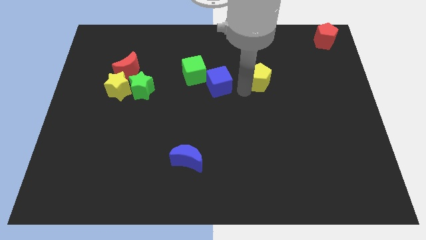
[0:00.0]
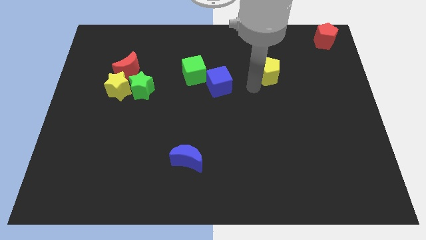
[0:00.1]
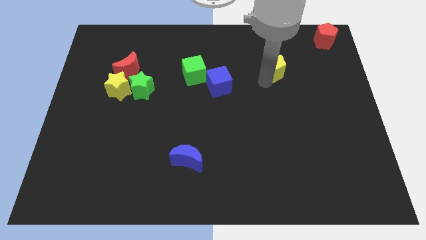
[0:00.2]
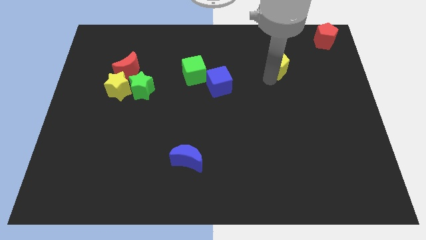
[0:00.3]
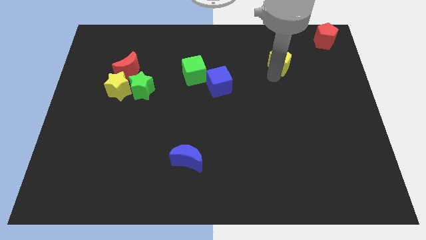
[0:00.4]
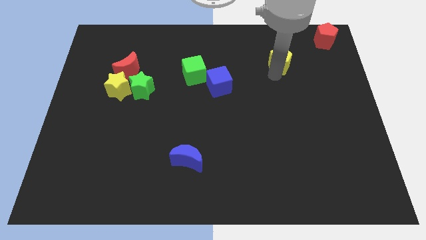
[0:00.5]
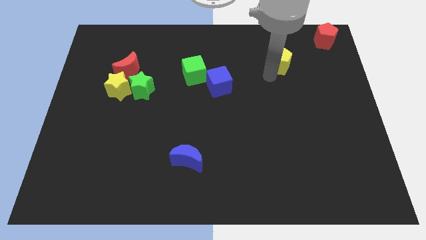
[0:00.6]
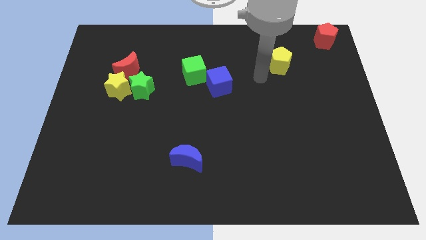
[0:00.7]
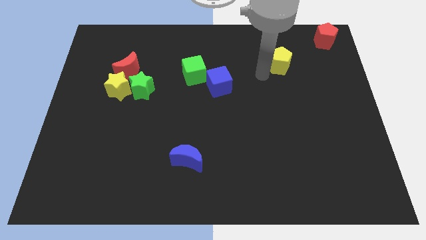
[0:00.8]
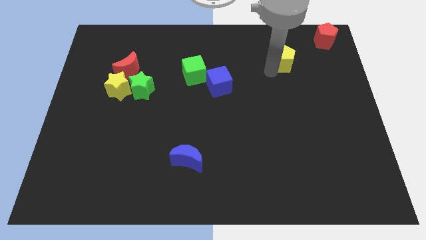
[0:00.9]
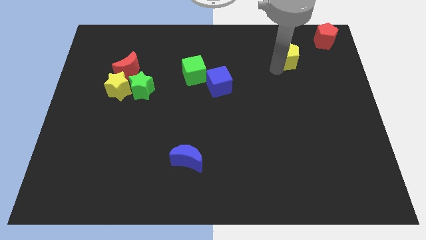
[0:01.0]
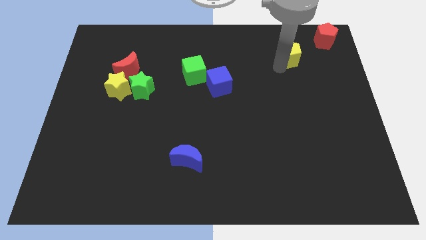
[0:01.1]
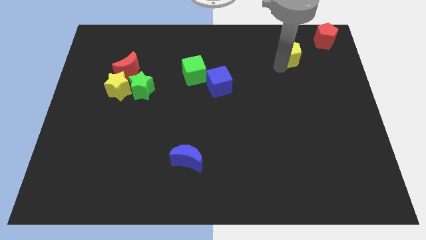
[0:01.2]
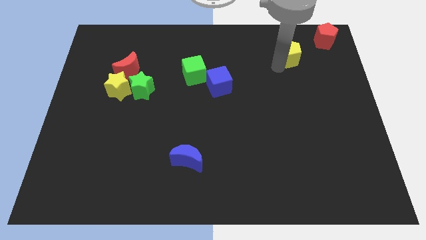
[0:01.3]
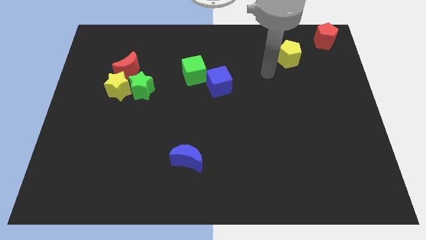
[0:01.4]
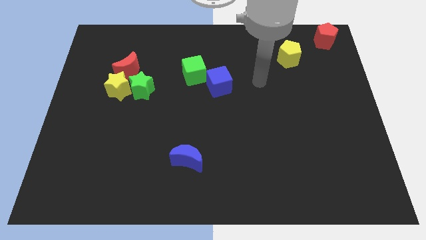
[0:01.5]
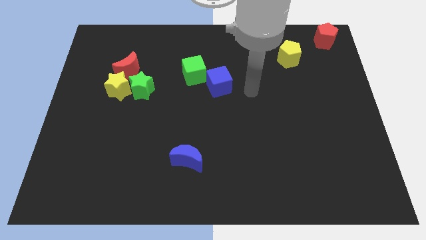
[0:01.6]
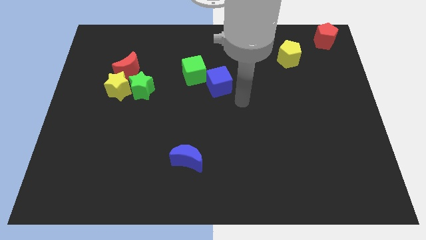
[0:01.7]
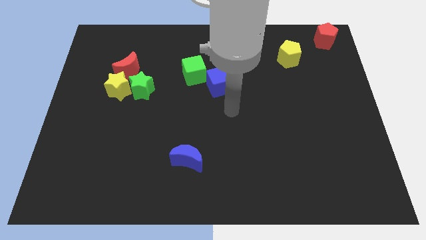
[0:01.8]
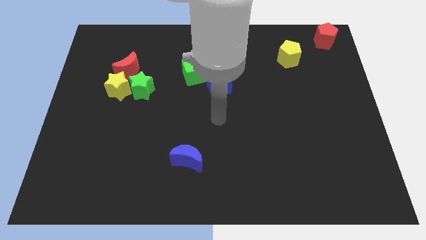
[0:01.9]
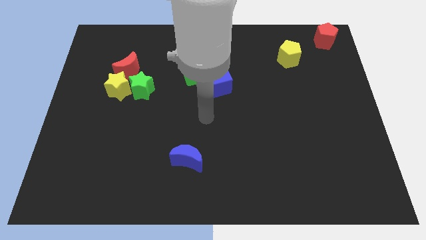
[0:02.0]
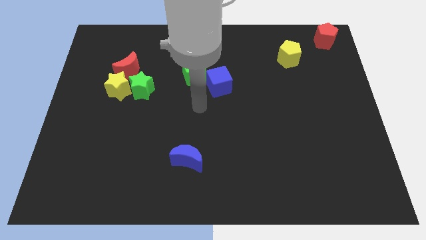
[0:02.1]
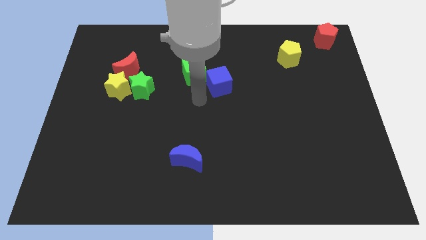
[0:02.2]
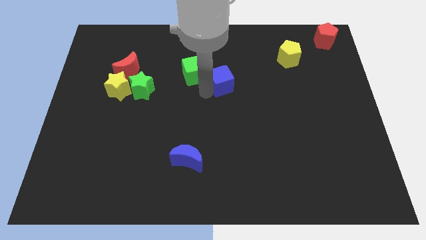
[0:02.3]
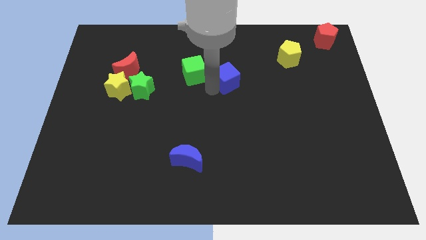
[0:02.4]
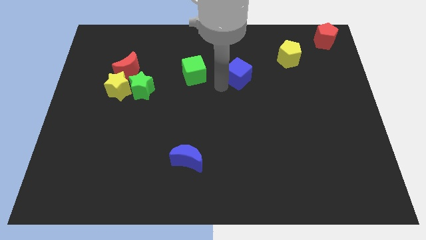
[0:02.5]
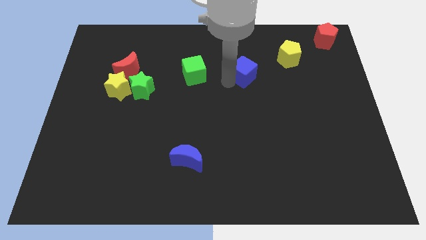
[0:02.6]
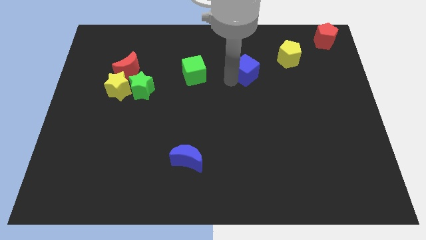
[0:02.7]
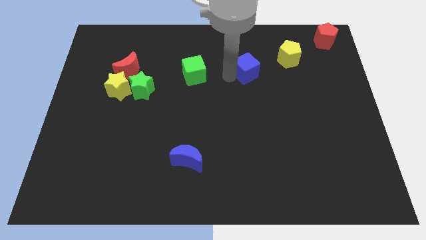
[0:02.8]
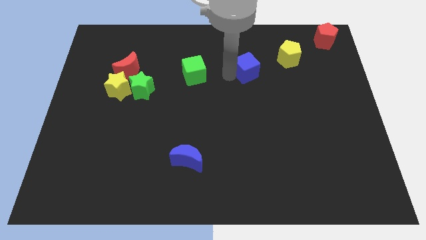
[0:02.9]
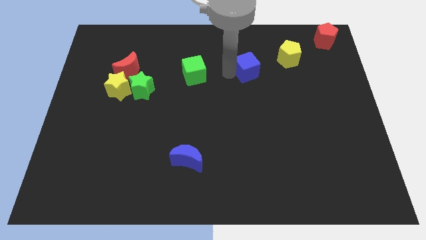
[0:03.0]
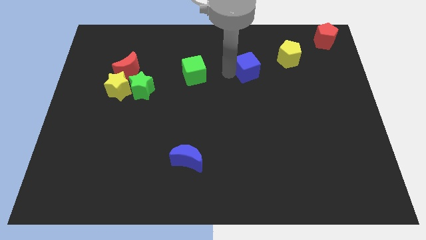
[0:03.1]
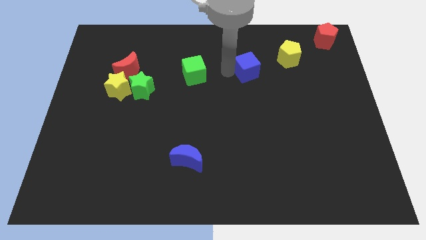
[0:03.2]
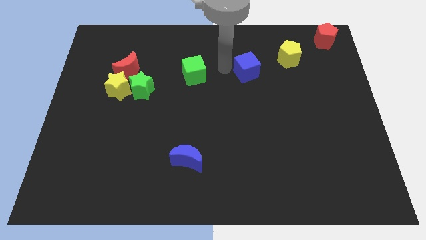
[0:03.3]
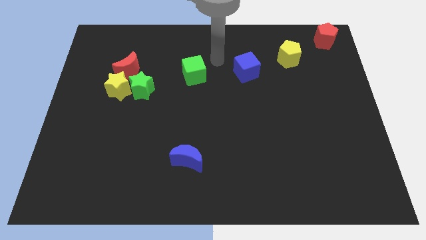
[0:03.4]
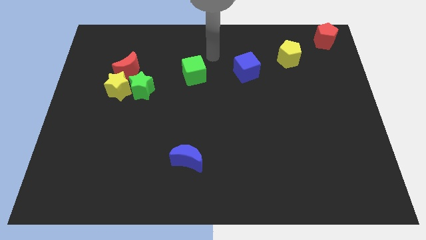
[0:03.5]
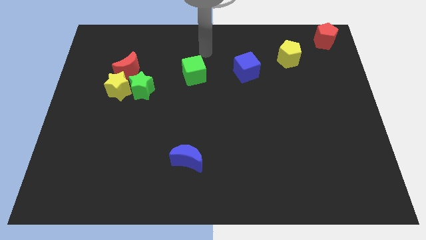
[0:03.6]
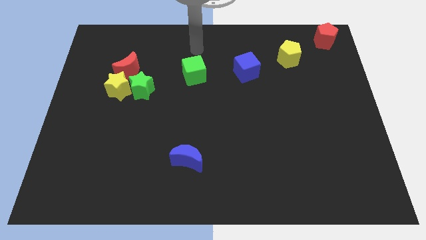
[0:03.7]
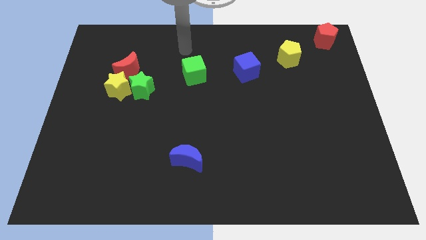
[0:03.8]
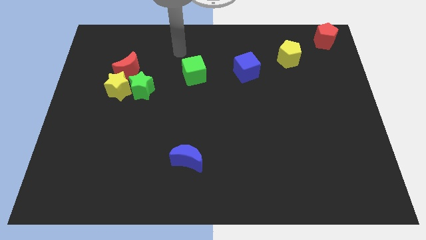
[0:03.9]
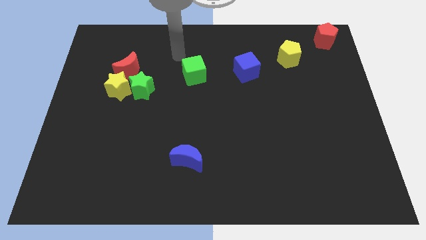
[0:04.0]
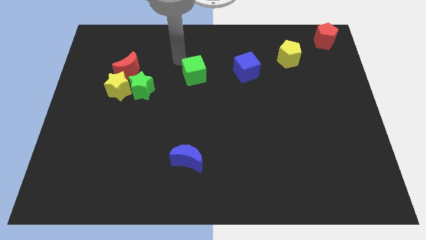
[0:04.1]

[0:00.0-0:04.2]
separate the blue cube green cube and the yellow pentagon

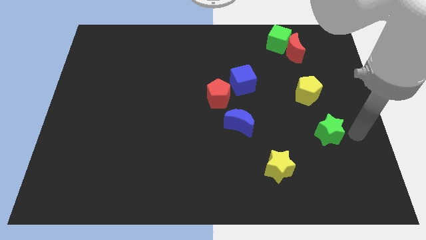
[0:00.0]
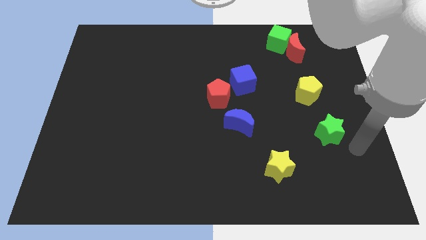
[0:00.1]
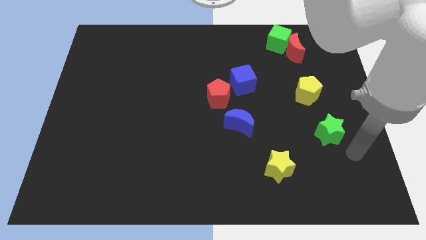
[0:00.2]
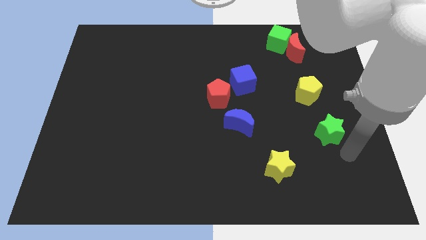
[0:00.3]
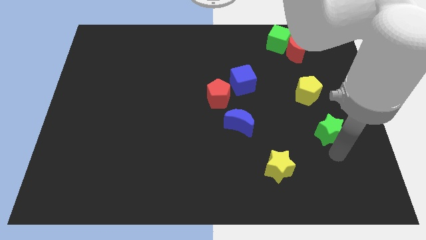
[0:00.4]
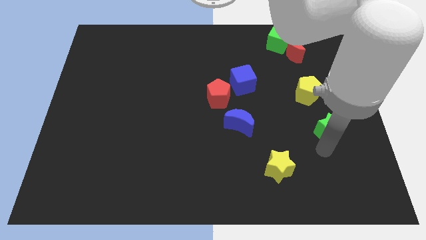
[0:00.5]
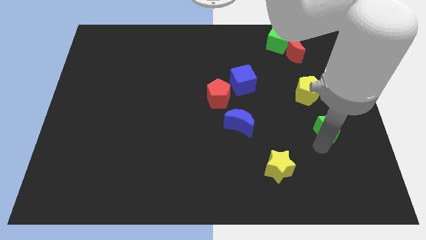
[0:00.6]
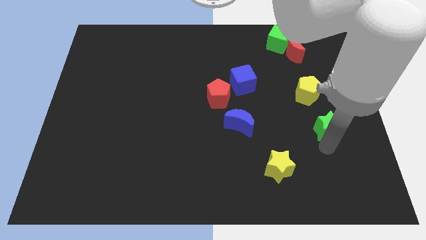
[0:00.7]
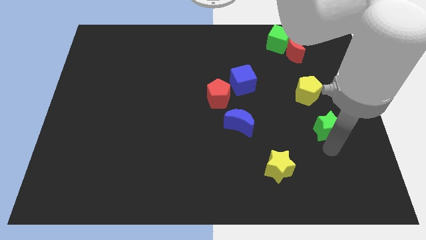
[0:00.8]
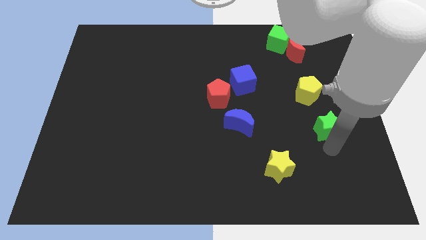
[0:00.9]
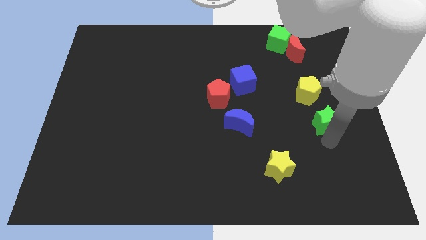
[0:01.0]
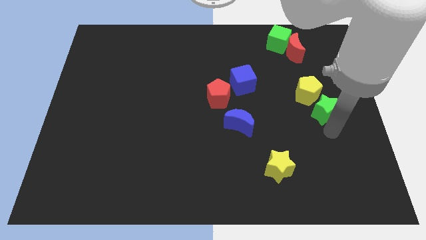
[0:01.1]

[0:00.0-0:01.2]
slide green star towards yellow pentagon

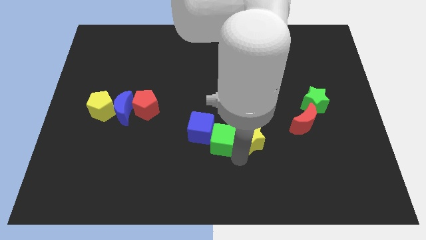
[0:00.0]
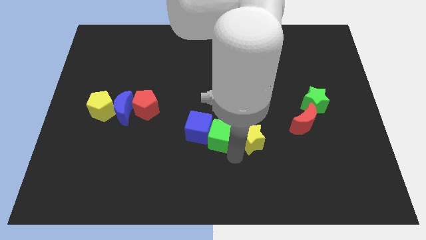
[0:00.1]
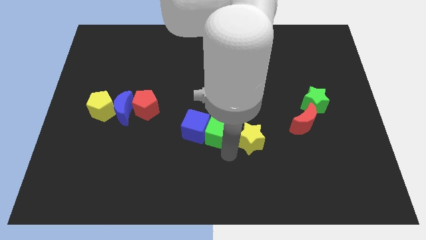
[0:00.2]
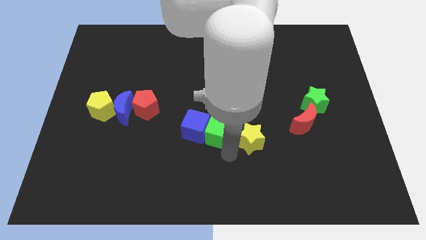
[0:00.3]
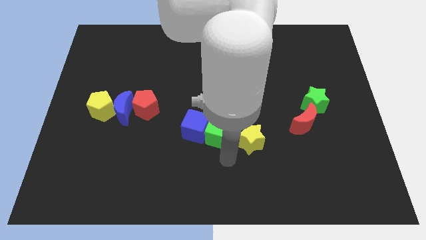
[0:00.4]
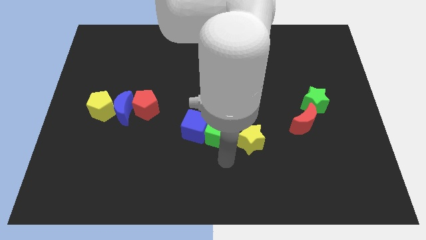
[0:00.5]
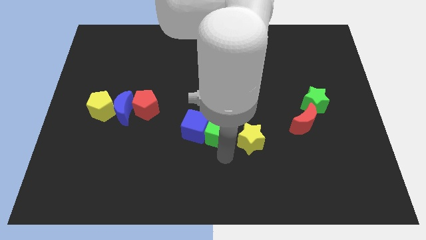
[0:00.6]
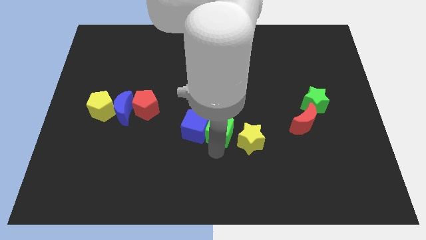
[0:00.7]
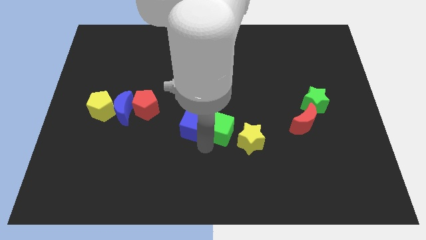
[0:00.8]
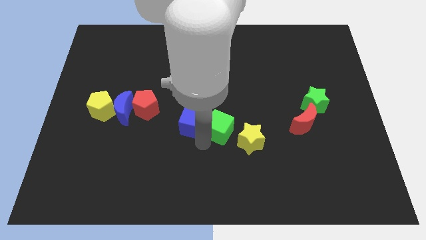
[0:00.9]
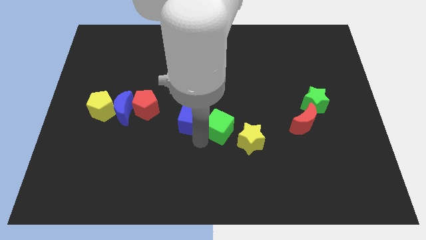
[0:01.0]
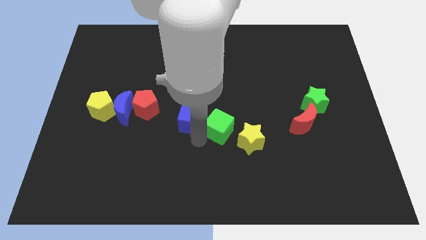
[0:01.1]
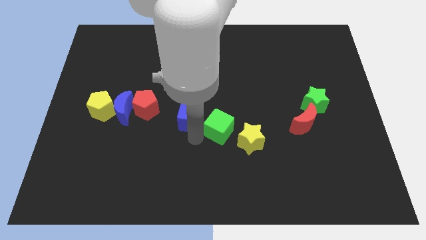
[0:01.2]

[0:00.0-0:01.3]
push the cubes towards the center of the board

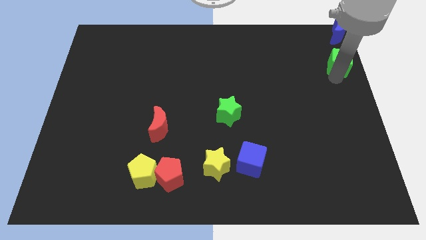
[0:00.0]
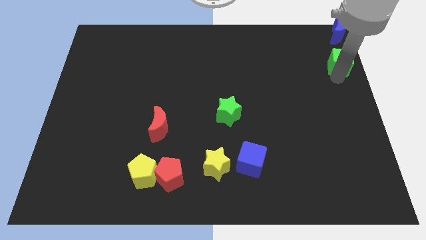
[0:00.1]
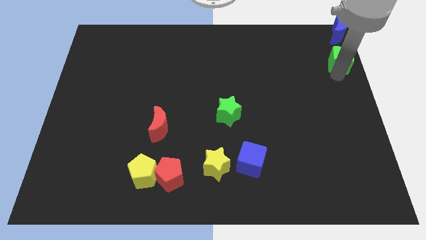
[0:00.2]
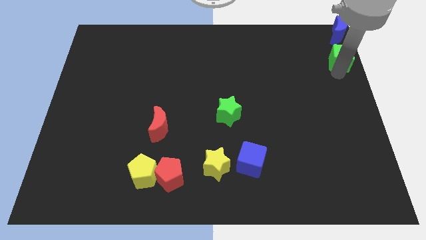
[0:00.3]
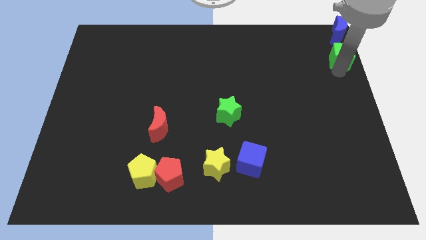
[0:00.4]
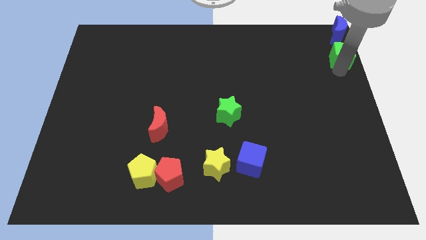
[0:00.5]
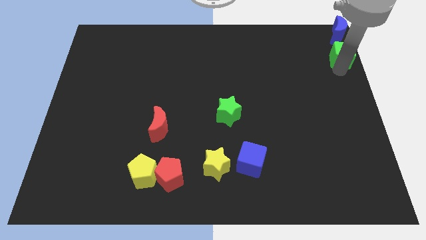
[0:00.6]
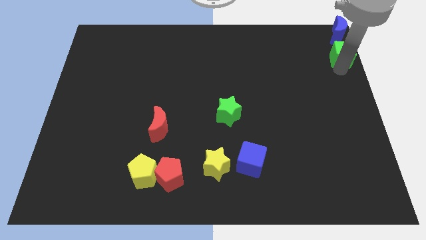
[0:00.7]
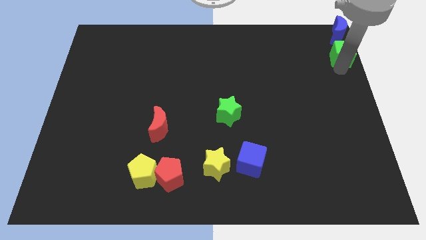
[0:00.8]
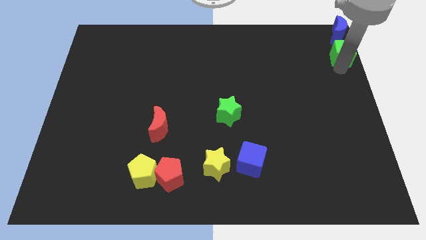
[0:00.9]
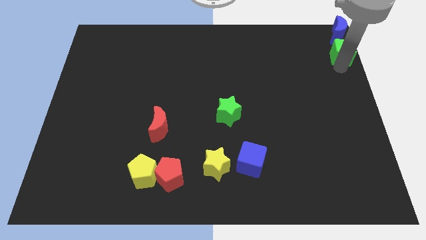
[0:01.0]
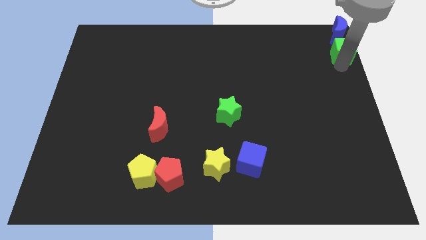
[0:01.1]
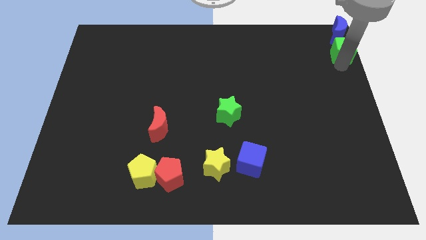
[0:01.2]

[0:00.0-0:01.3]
move the green cube to the bottom side of the blue moon

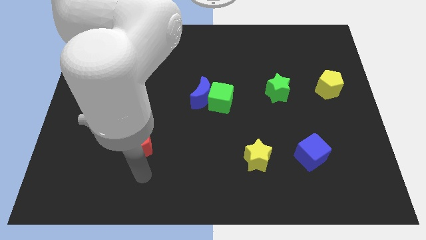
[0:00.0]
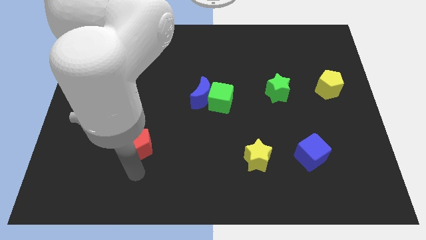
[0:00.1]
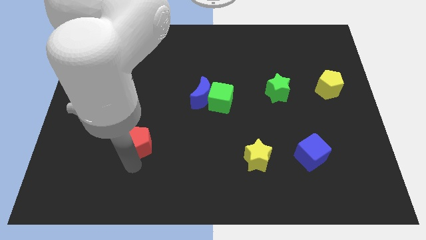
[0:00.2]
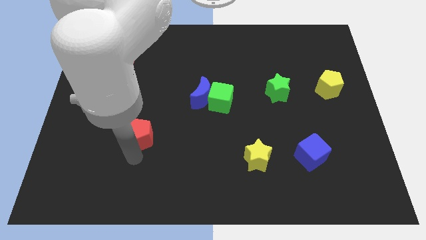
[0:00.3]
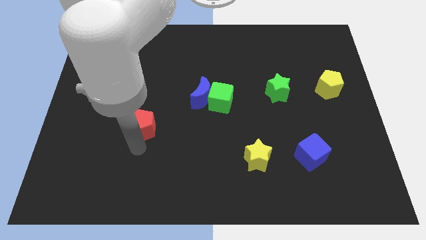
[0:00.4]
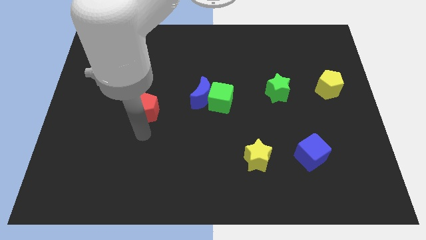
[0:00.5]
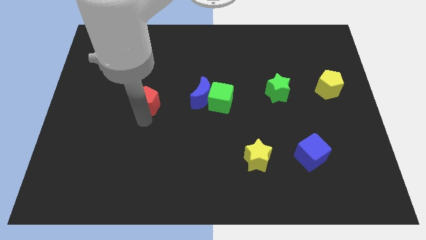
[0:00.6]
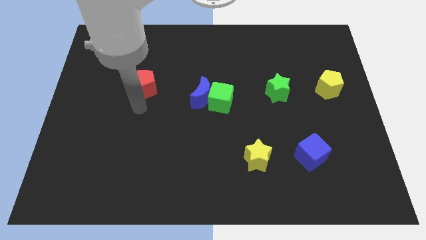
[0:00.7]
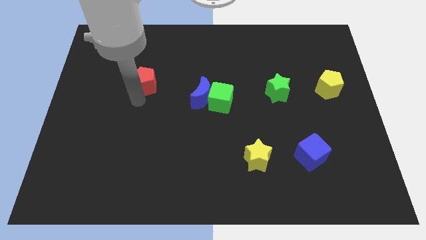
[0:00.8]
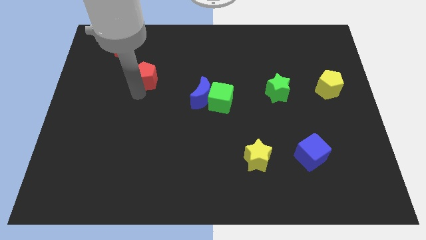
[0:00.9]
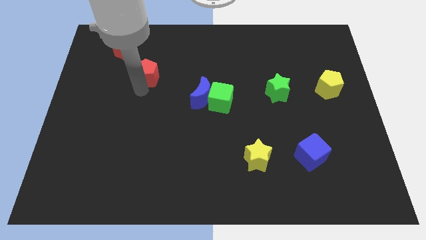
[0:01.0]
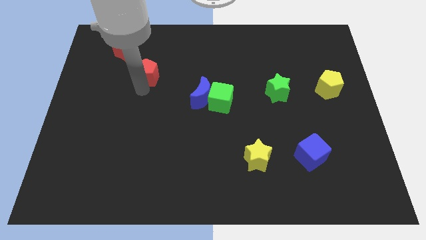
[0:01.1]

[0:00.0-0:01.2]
push the red pentagon towards the red crescent
